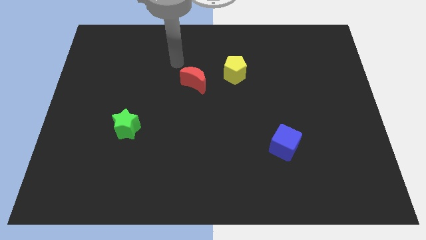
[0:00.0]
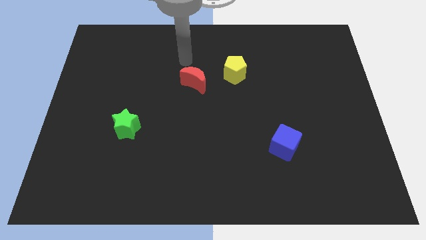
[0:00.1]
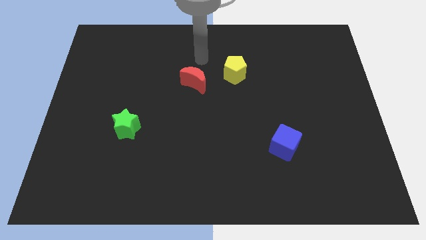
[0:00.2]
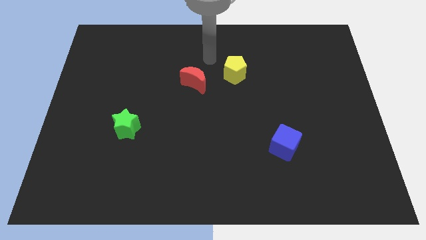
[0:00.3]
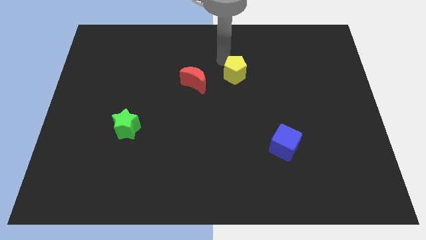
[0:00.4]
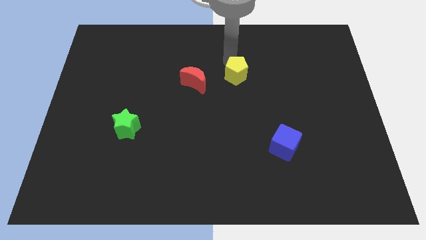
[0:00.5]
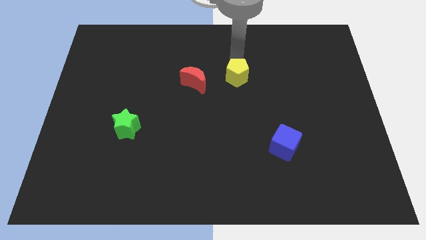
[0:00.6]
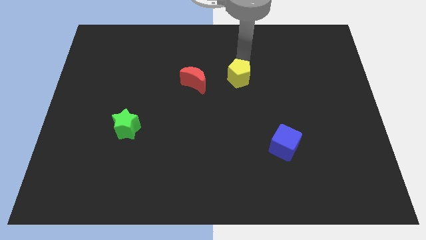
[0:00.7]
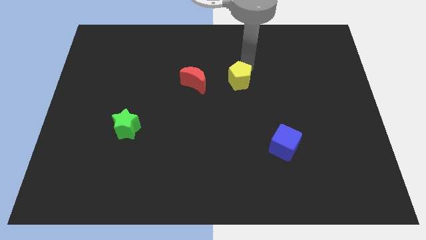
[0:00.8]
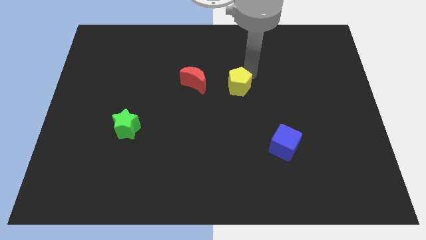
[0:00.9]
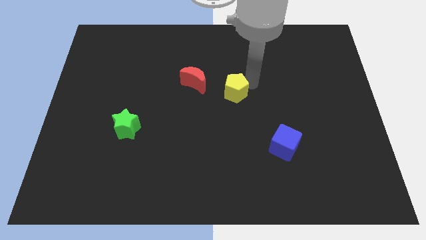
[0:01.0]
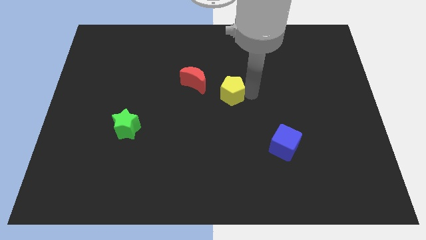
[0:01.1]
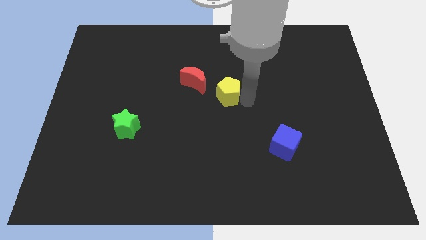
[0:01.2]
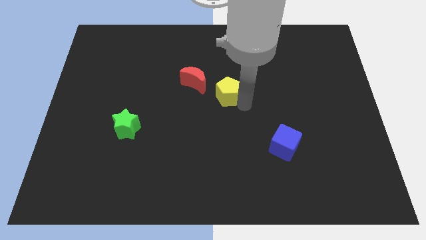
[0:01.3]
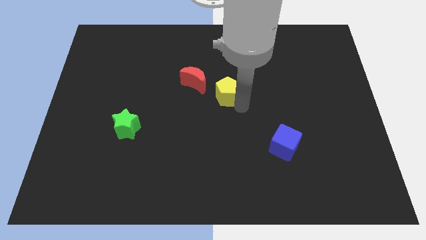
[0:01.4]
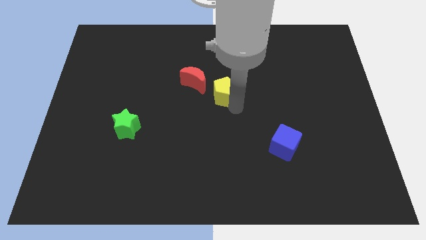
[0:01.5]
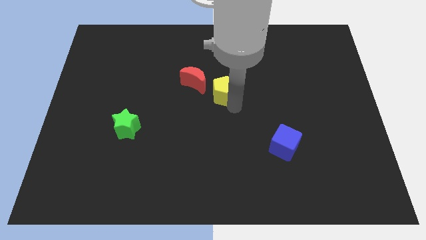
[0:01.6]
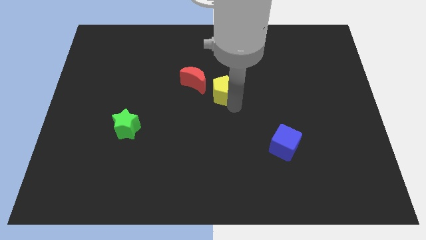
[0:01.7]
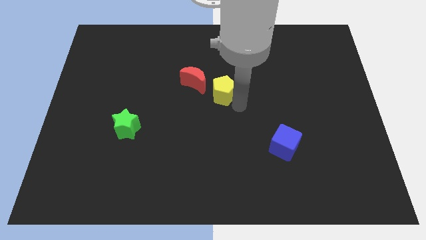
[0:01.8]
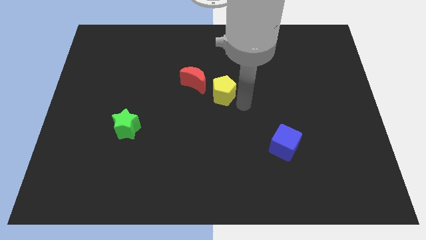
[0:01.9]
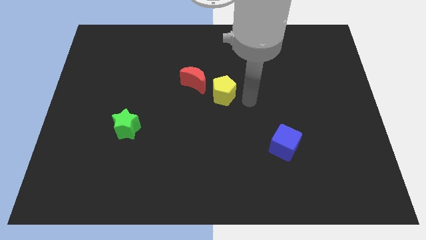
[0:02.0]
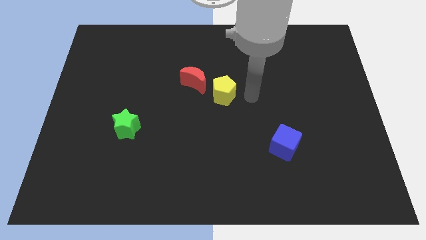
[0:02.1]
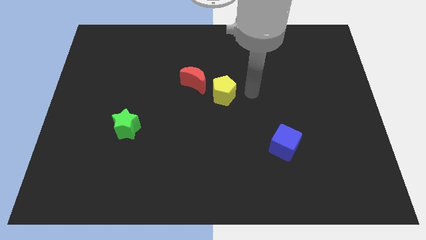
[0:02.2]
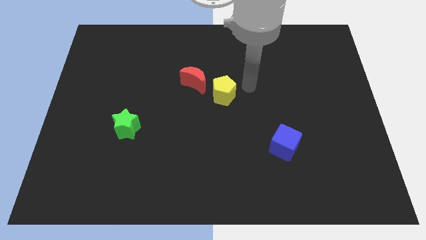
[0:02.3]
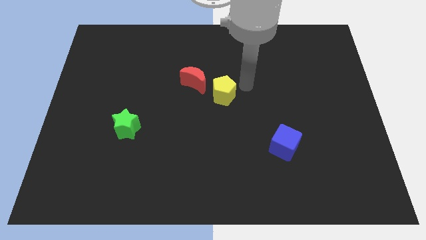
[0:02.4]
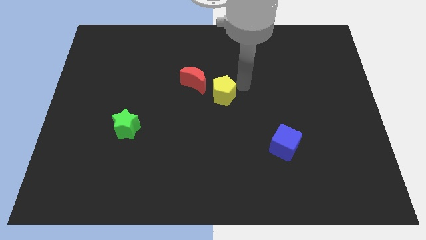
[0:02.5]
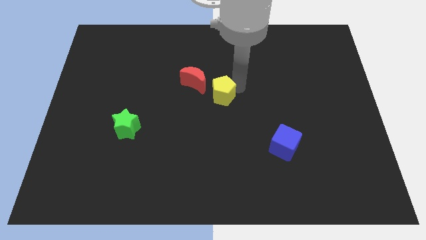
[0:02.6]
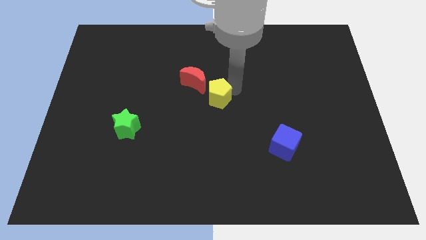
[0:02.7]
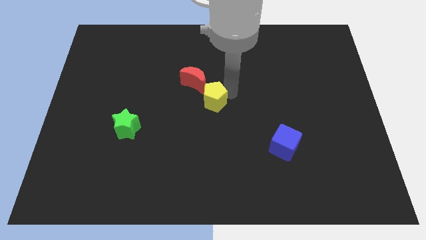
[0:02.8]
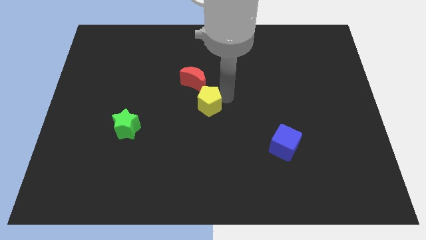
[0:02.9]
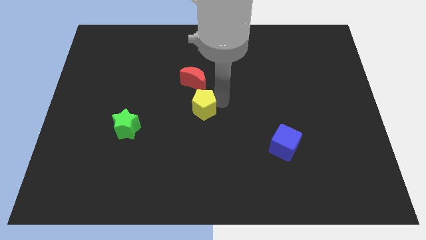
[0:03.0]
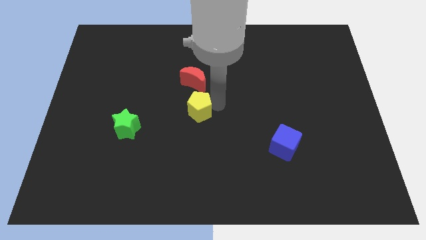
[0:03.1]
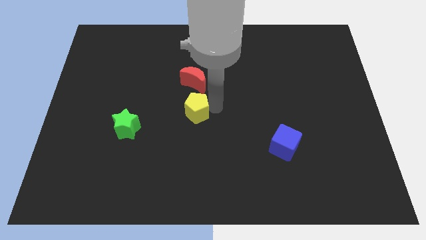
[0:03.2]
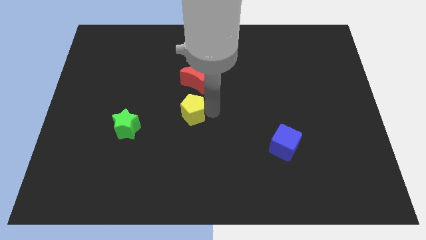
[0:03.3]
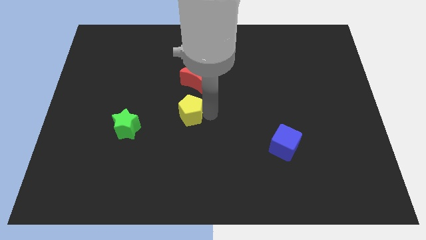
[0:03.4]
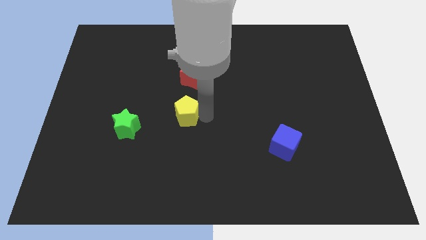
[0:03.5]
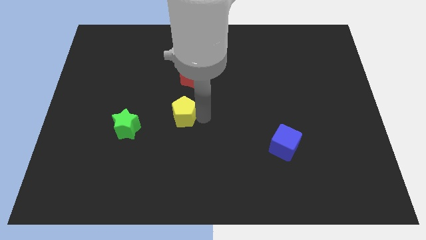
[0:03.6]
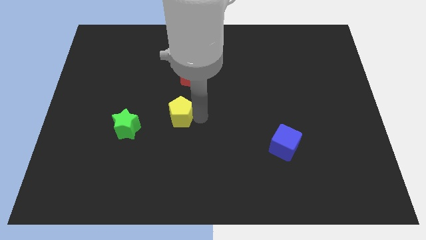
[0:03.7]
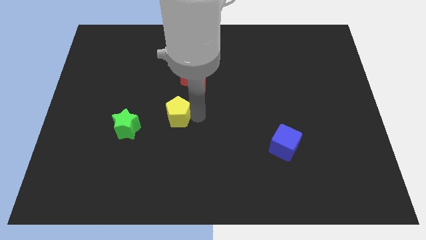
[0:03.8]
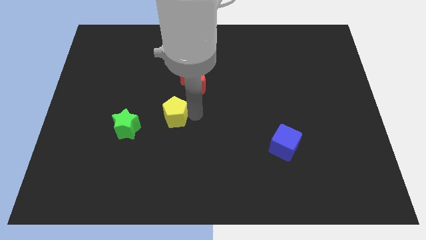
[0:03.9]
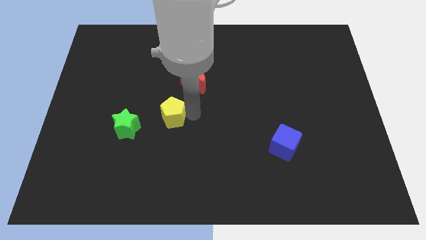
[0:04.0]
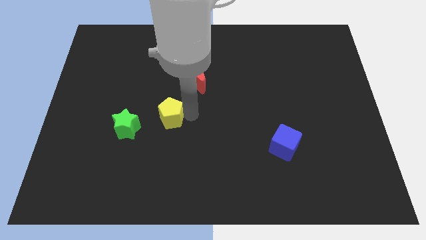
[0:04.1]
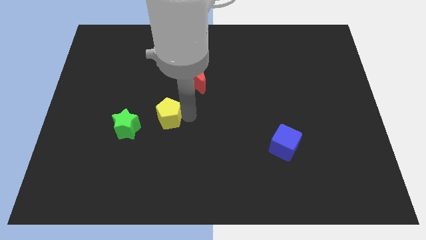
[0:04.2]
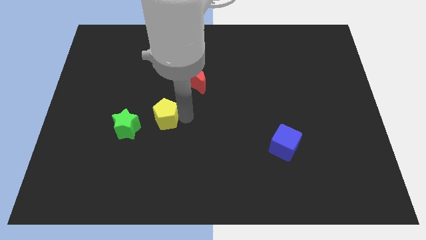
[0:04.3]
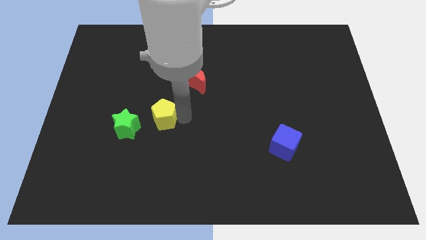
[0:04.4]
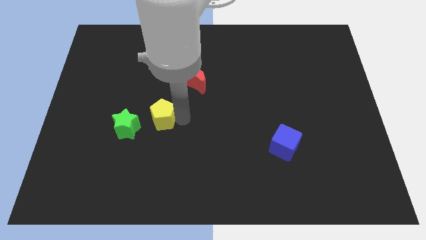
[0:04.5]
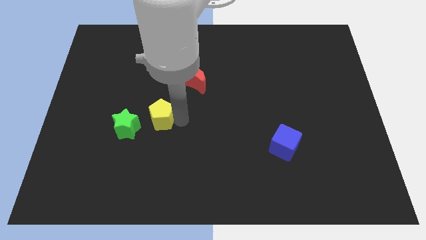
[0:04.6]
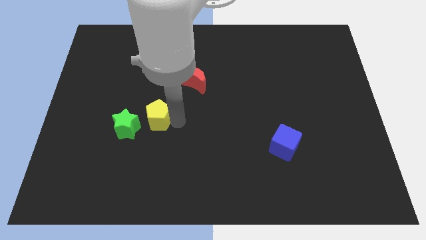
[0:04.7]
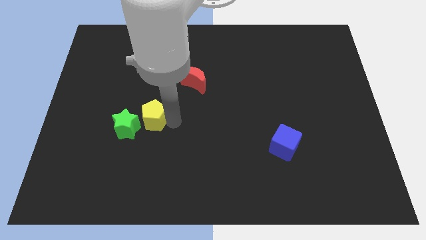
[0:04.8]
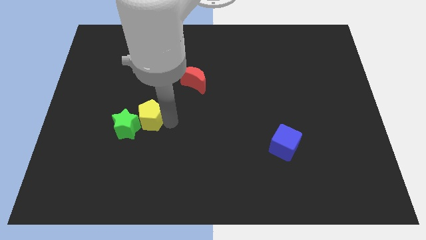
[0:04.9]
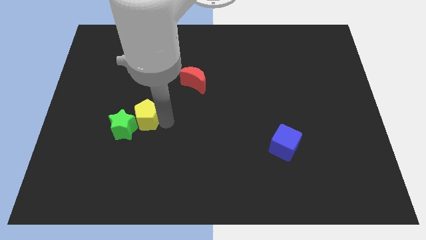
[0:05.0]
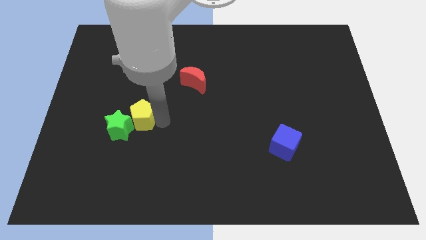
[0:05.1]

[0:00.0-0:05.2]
push the yellow block towards the star

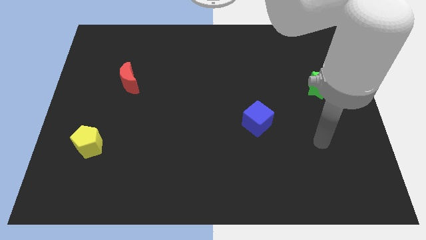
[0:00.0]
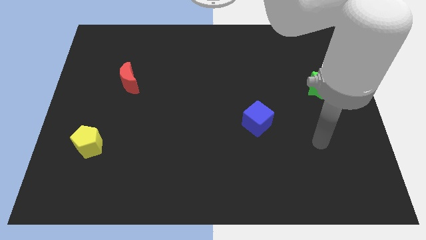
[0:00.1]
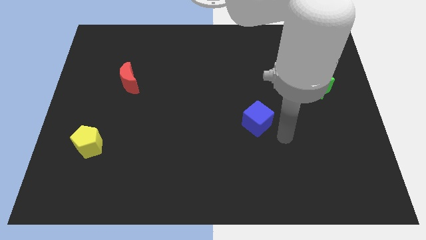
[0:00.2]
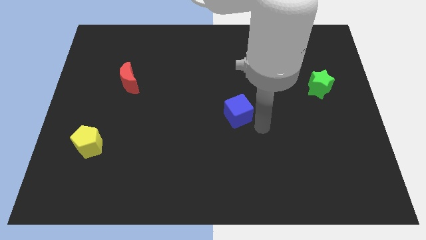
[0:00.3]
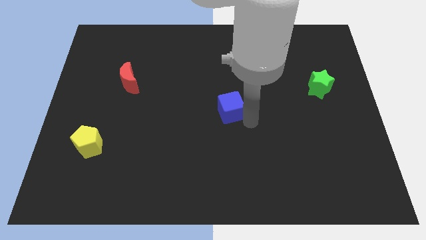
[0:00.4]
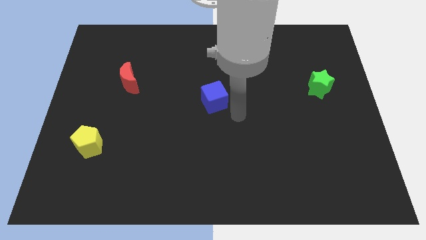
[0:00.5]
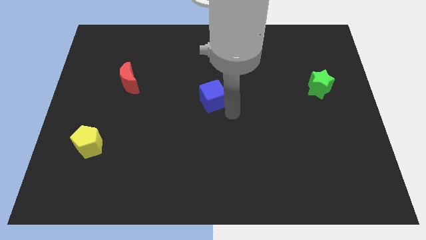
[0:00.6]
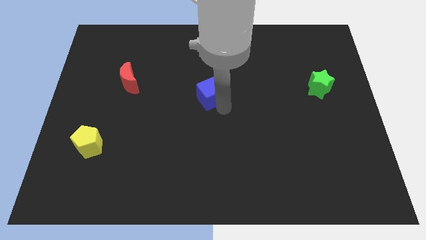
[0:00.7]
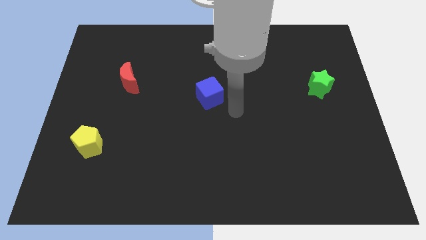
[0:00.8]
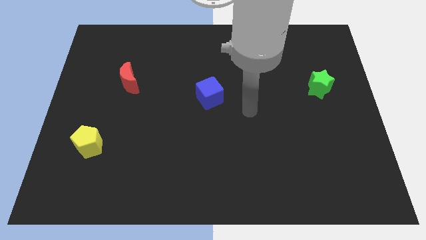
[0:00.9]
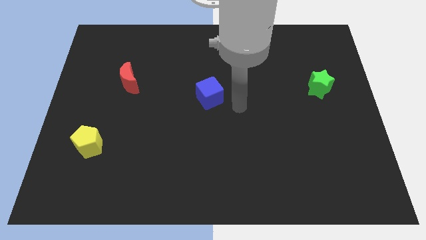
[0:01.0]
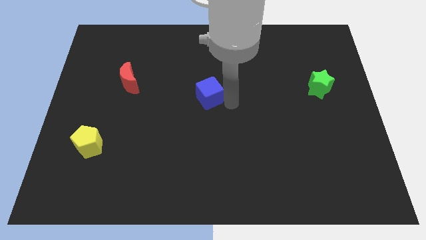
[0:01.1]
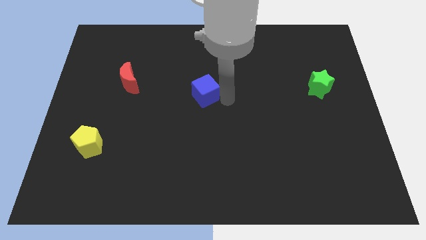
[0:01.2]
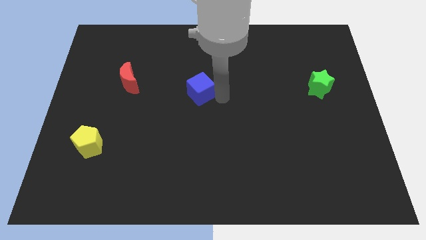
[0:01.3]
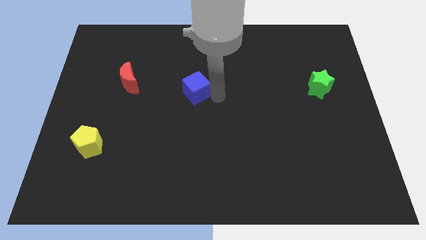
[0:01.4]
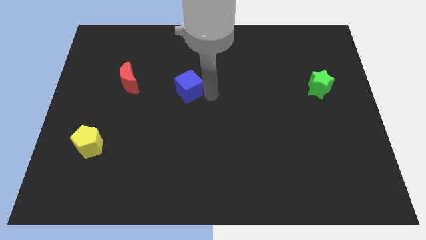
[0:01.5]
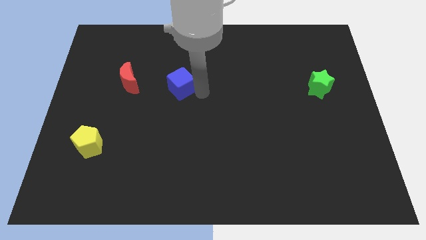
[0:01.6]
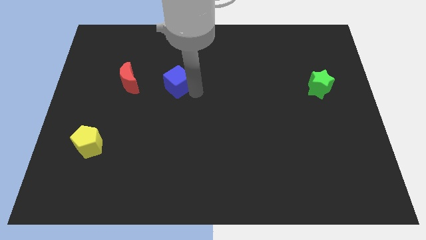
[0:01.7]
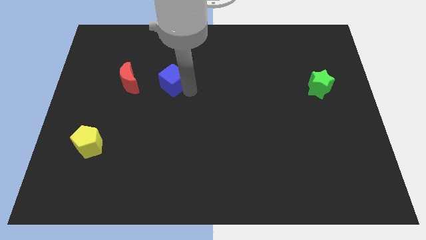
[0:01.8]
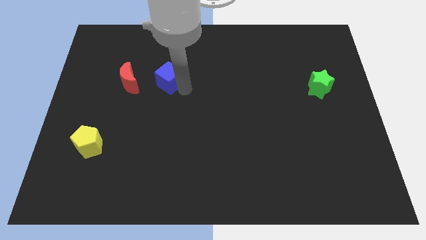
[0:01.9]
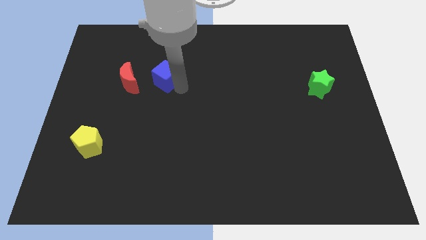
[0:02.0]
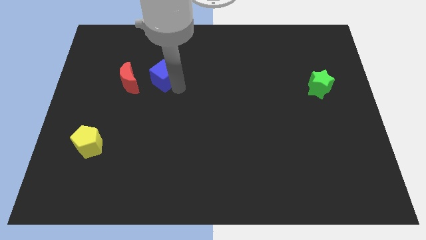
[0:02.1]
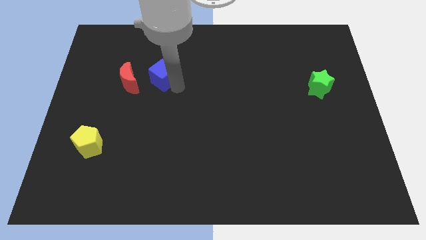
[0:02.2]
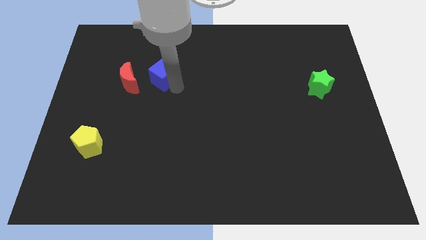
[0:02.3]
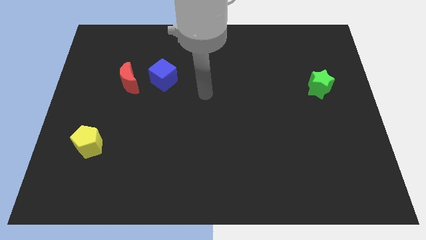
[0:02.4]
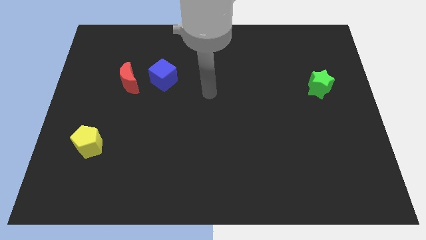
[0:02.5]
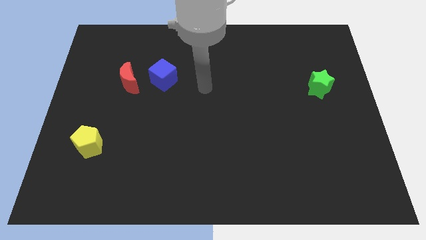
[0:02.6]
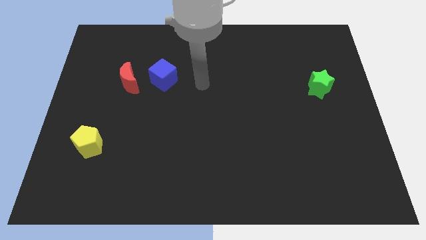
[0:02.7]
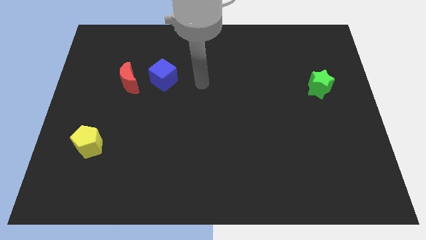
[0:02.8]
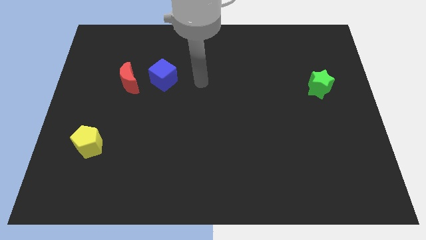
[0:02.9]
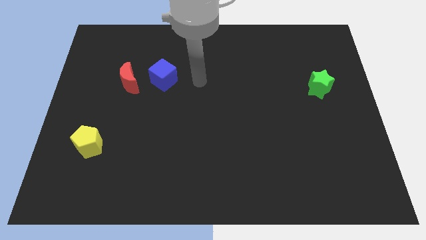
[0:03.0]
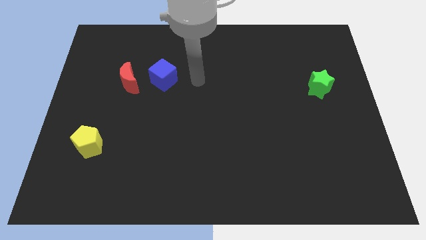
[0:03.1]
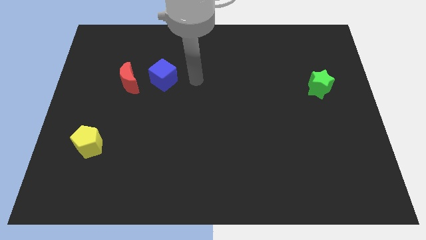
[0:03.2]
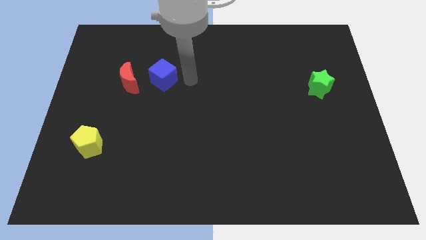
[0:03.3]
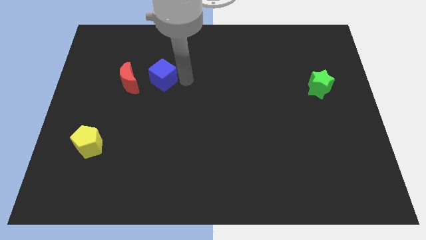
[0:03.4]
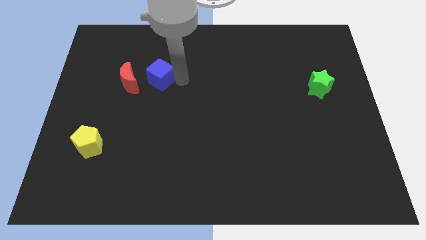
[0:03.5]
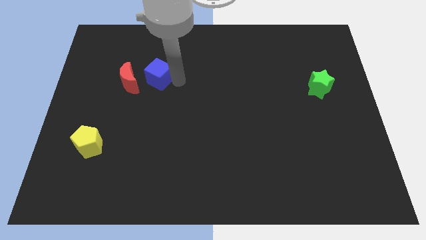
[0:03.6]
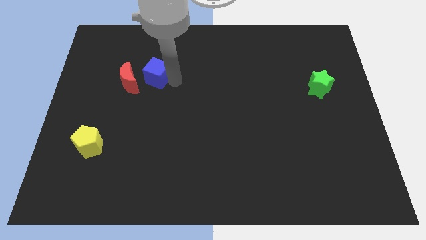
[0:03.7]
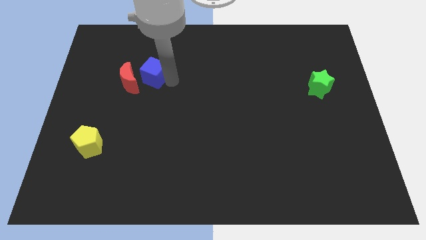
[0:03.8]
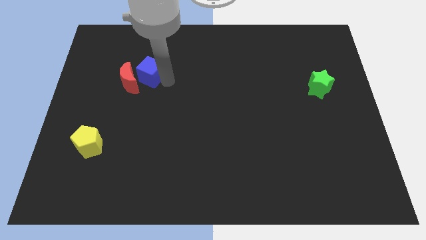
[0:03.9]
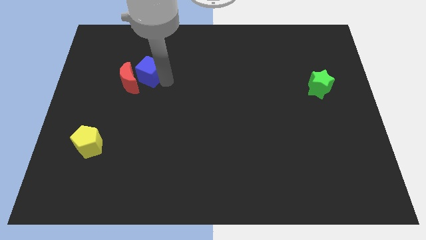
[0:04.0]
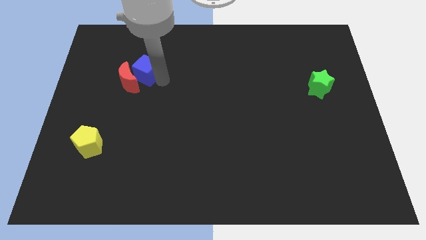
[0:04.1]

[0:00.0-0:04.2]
push the blue block close to the red moon
